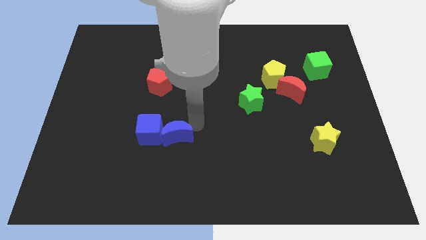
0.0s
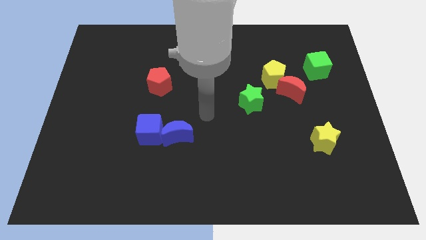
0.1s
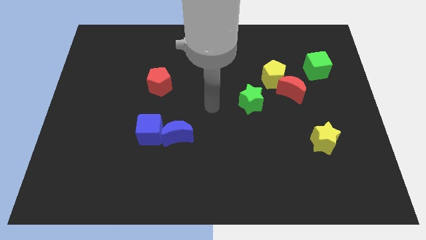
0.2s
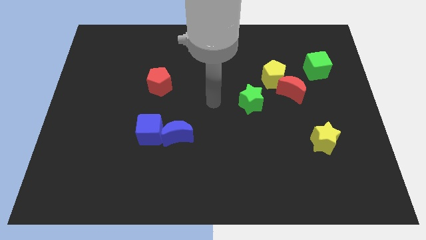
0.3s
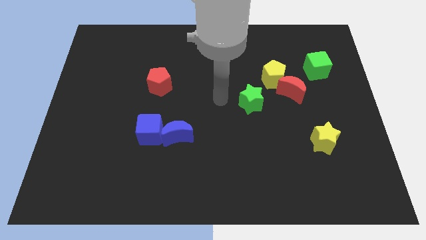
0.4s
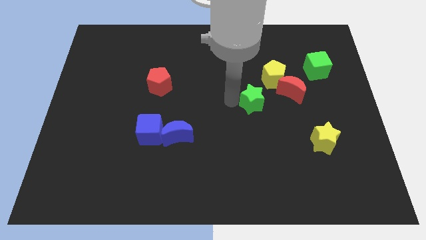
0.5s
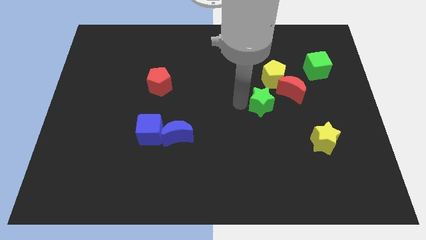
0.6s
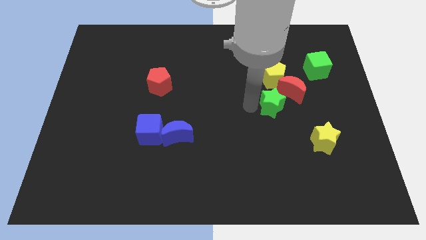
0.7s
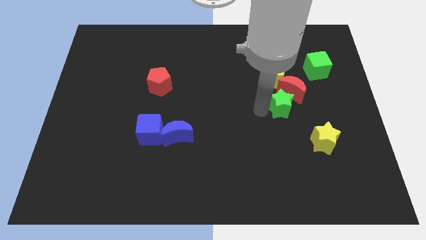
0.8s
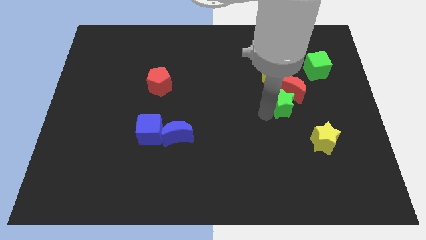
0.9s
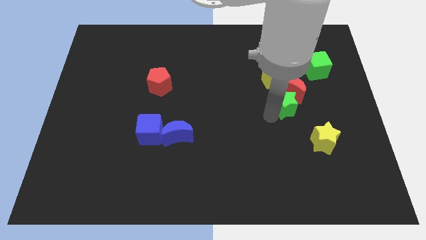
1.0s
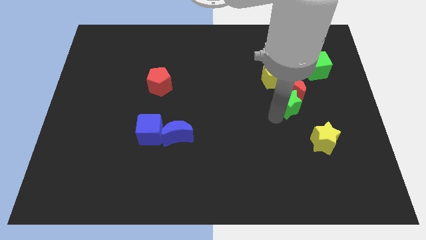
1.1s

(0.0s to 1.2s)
slide the green star vertically below the red crescent

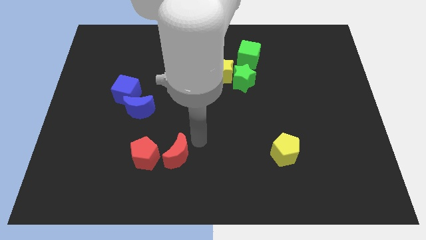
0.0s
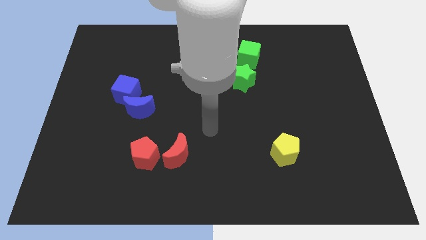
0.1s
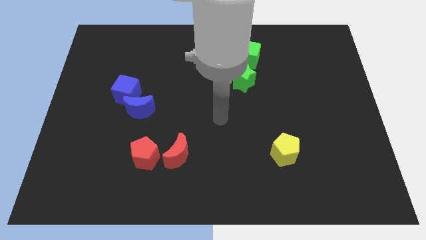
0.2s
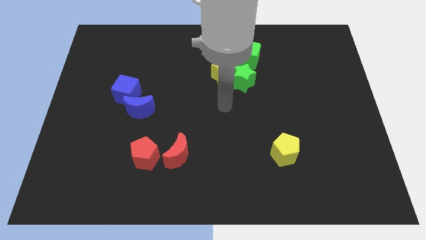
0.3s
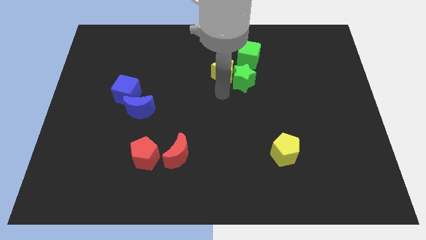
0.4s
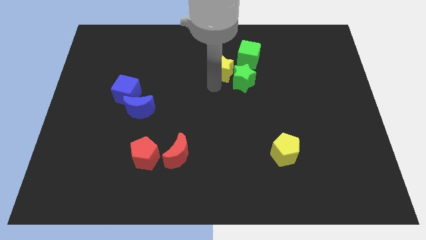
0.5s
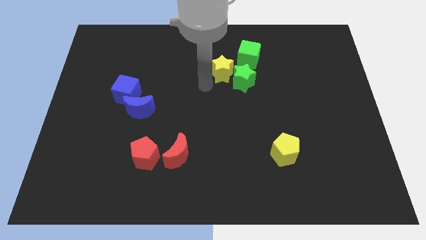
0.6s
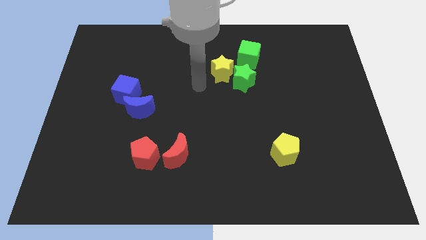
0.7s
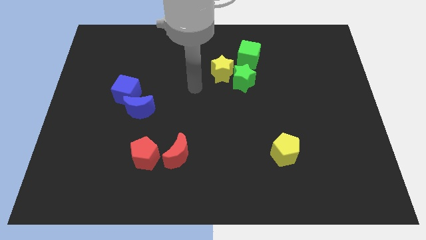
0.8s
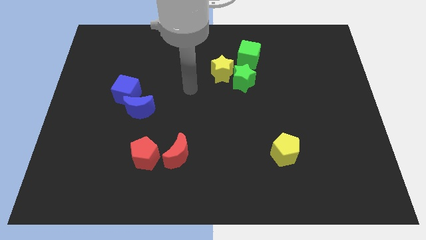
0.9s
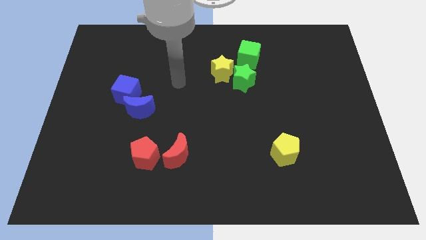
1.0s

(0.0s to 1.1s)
move your hand away from the red crescent

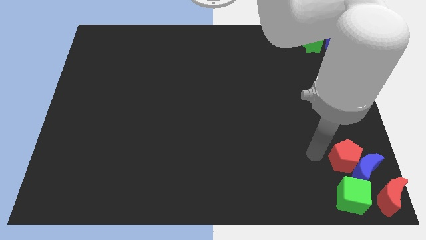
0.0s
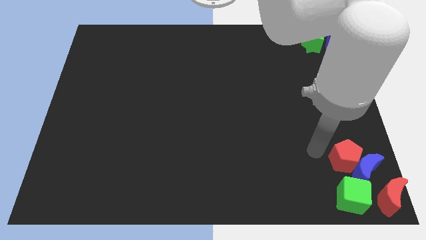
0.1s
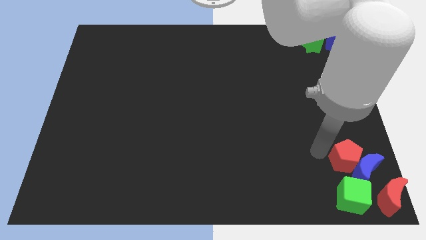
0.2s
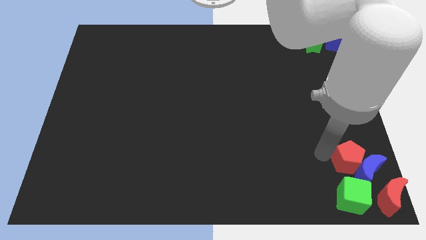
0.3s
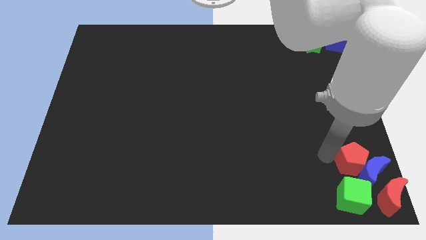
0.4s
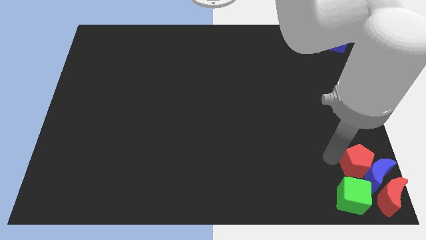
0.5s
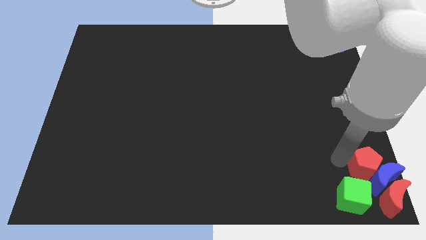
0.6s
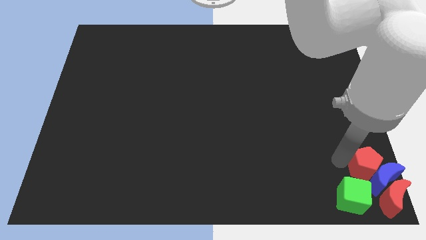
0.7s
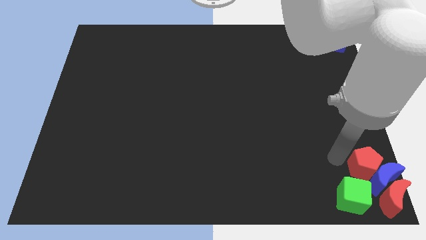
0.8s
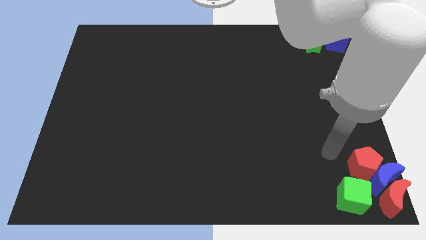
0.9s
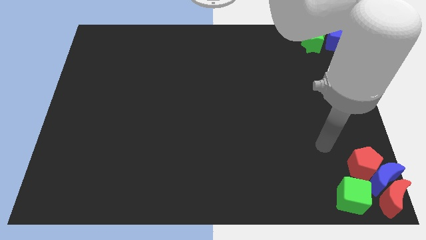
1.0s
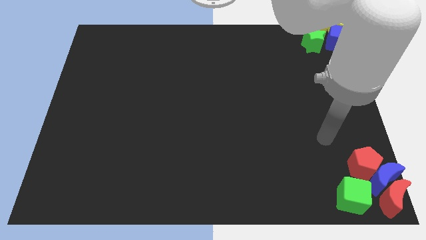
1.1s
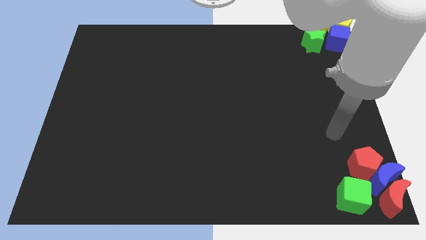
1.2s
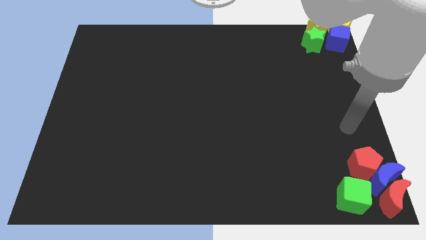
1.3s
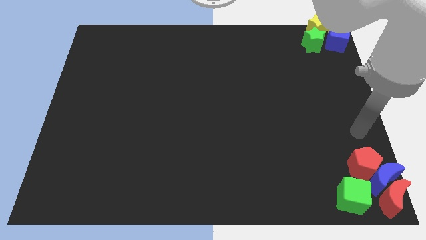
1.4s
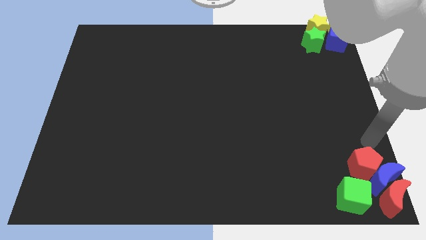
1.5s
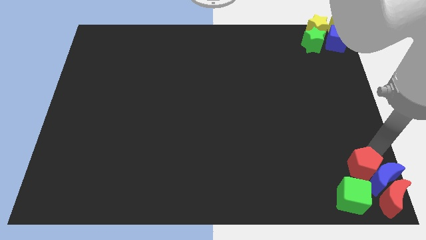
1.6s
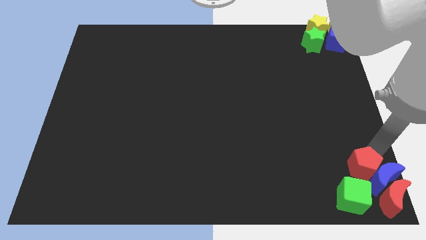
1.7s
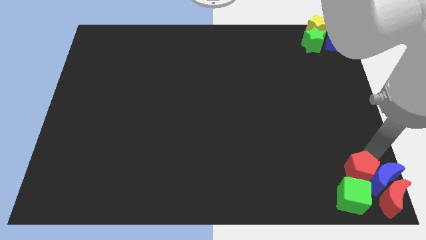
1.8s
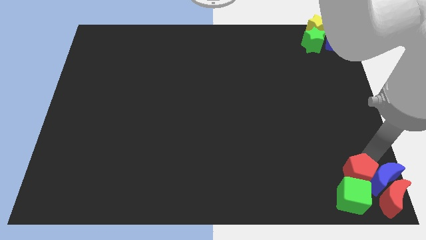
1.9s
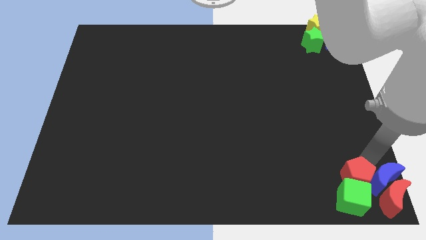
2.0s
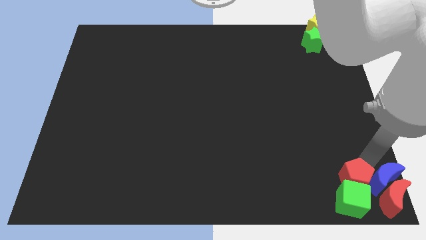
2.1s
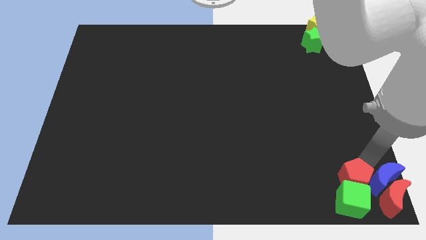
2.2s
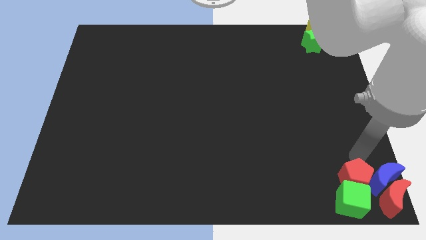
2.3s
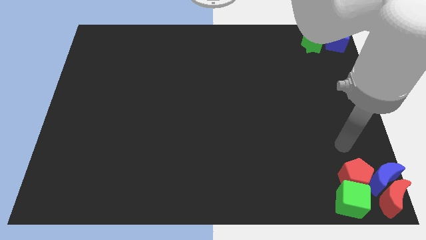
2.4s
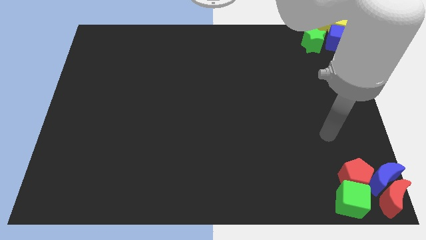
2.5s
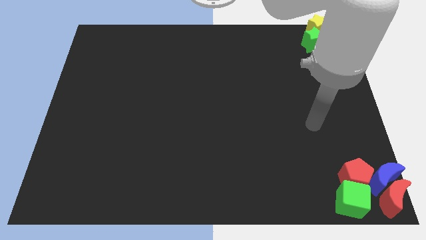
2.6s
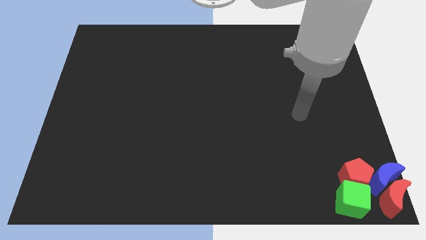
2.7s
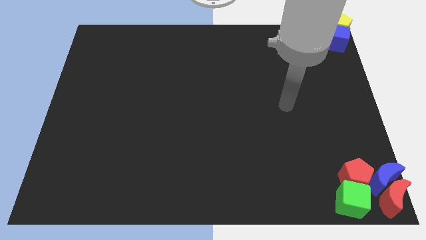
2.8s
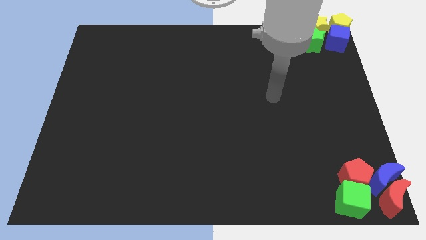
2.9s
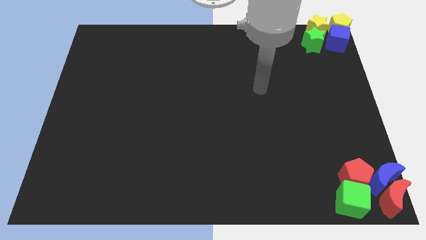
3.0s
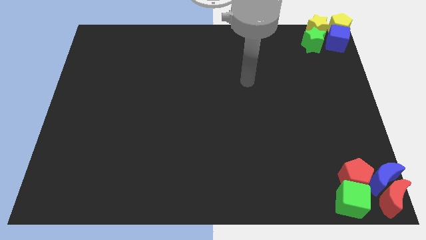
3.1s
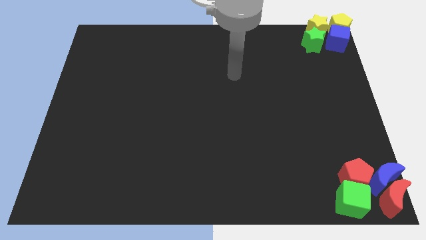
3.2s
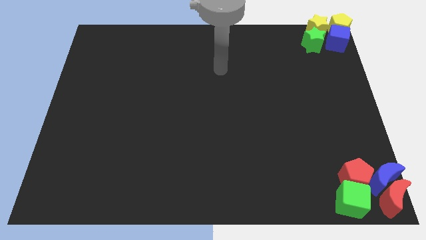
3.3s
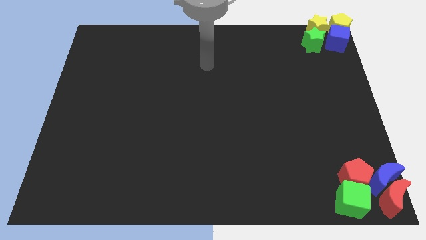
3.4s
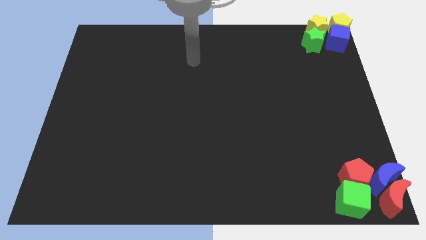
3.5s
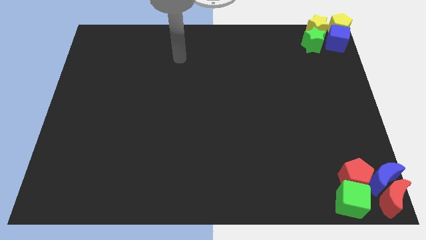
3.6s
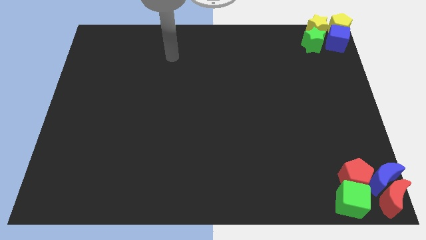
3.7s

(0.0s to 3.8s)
place the red pentagon above the green cube

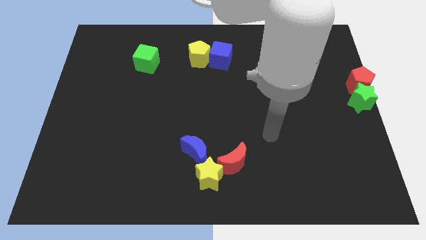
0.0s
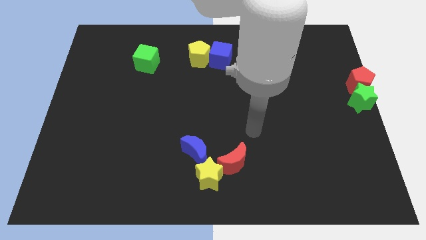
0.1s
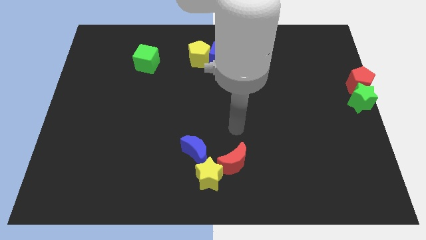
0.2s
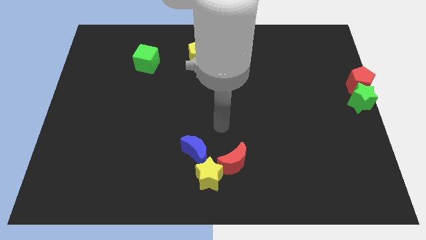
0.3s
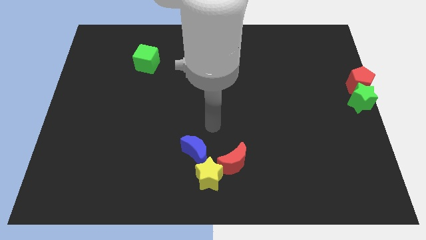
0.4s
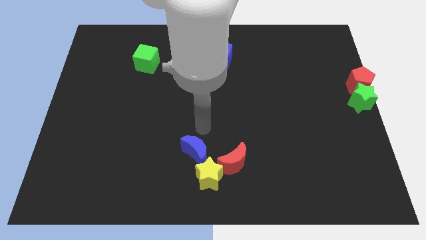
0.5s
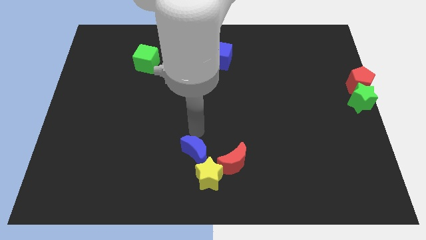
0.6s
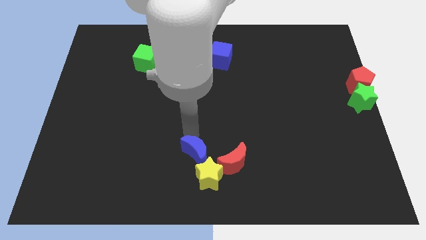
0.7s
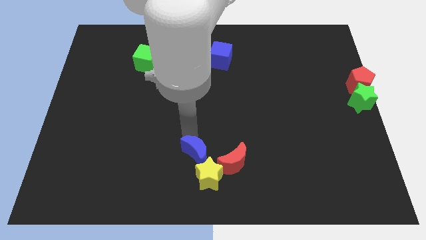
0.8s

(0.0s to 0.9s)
touch the top of blue moon

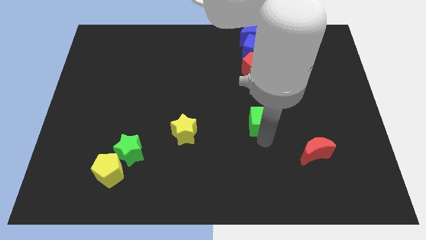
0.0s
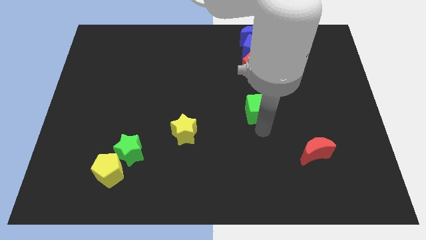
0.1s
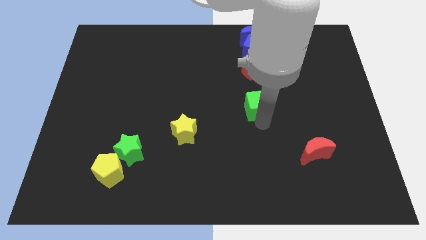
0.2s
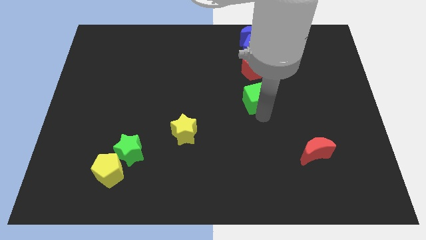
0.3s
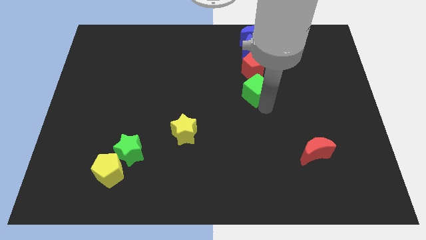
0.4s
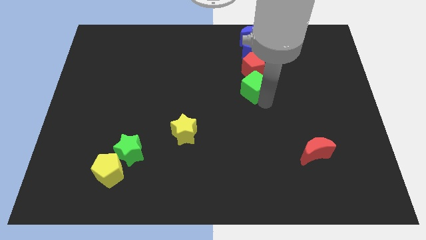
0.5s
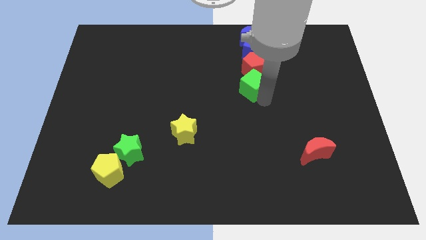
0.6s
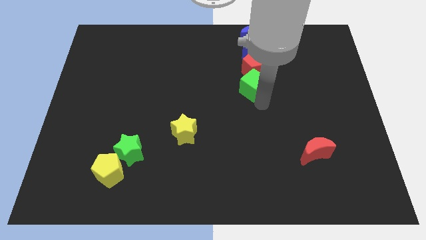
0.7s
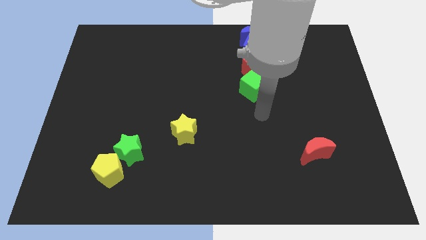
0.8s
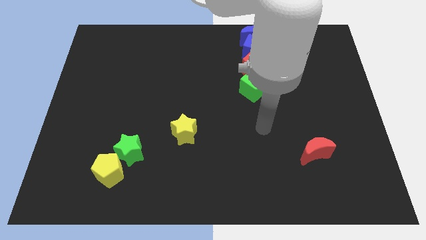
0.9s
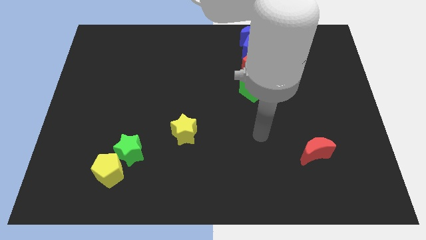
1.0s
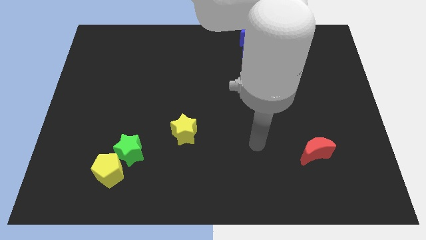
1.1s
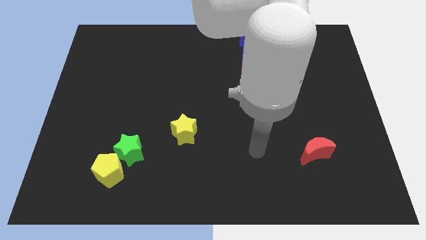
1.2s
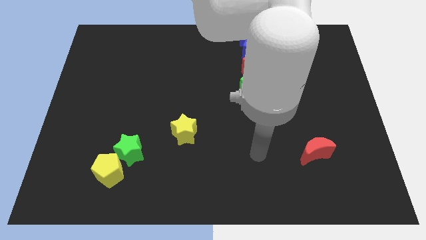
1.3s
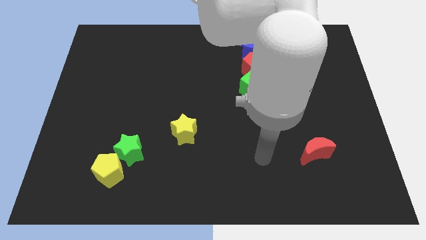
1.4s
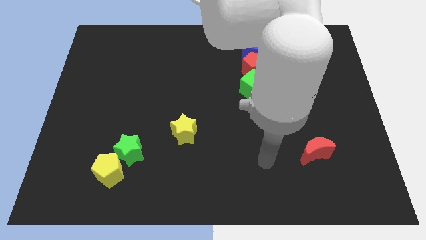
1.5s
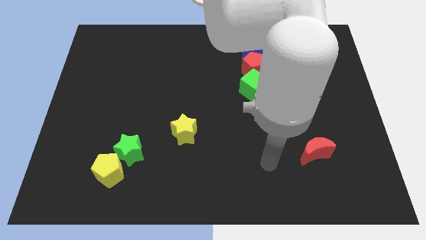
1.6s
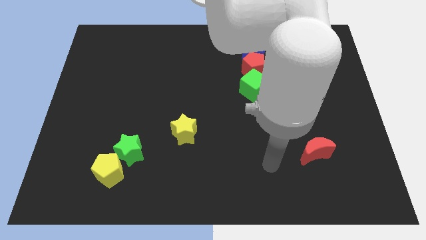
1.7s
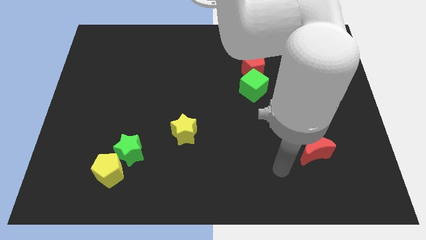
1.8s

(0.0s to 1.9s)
push the green cube into the red pentagon

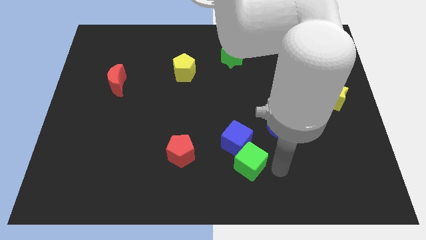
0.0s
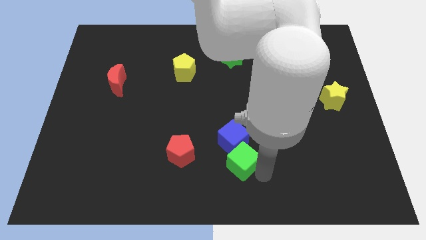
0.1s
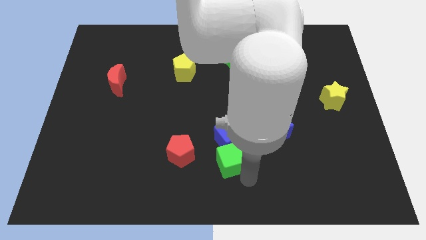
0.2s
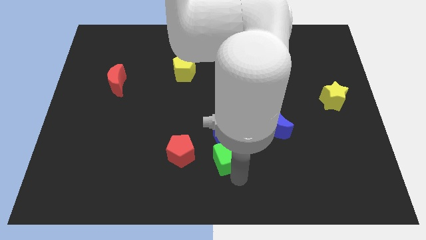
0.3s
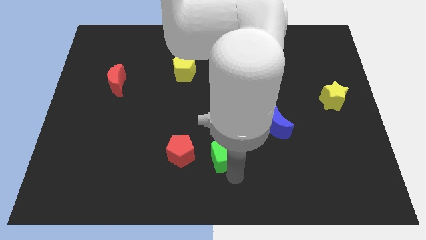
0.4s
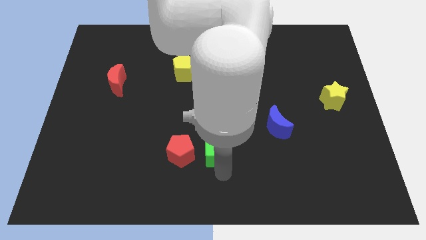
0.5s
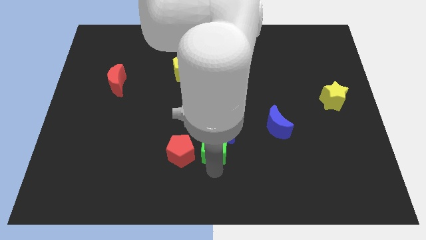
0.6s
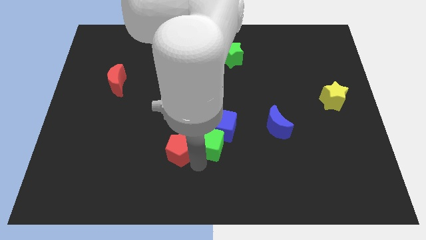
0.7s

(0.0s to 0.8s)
place green cube beside red pentagon
